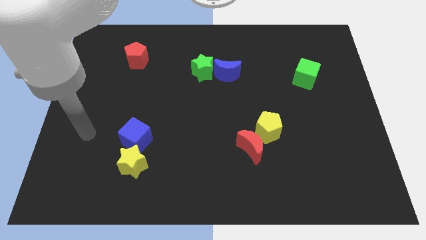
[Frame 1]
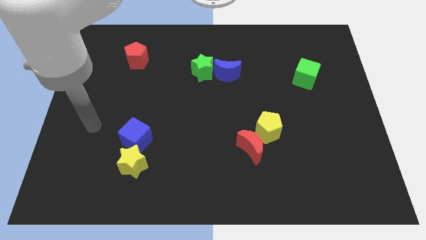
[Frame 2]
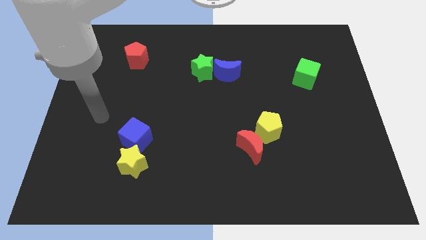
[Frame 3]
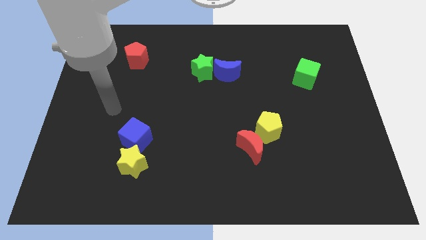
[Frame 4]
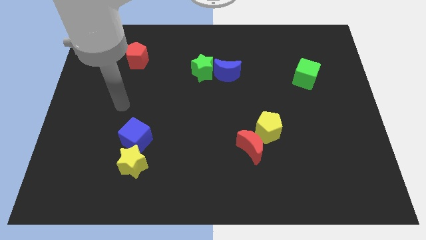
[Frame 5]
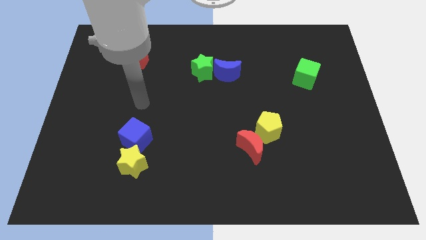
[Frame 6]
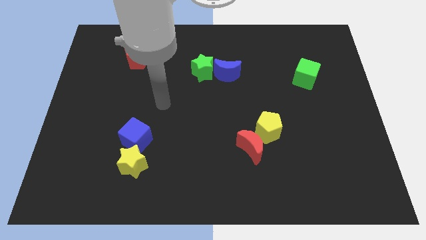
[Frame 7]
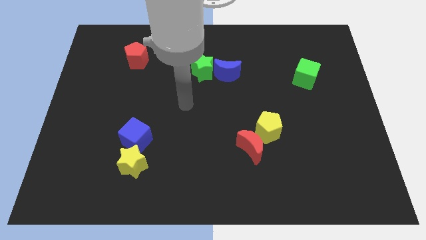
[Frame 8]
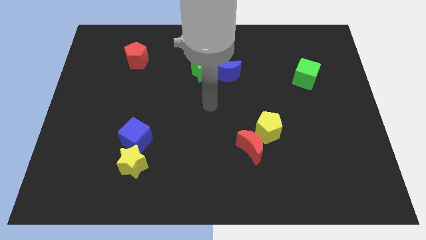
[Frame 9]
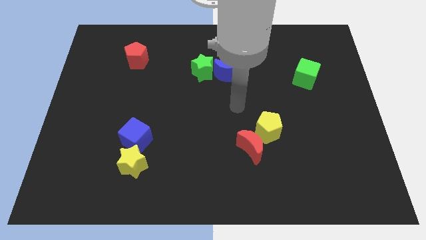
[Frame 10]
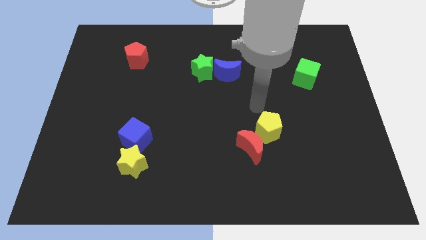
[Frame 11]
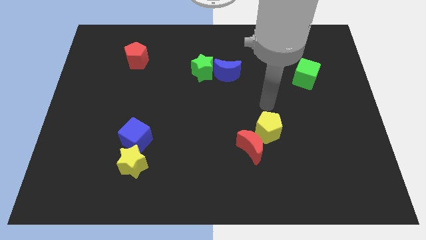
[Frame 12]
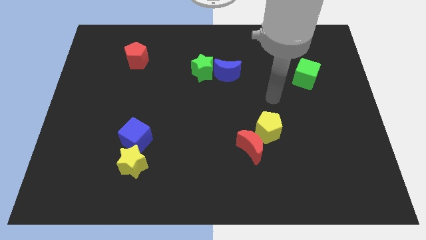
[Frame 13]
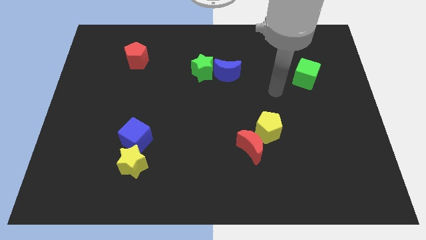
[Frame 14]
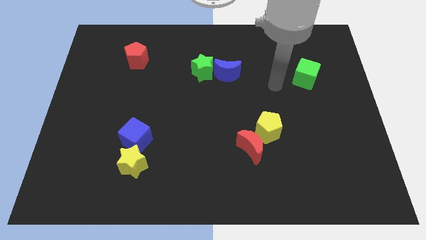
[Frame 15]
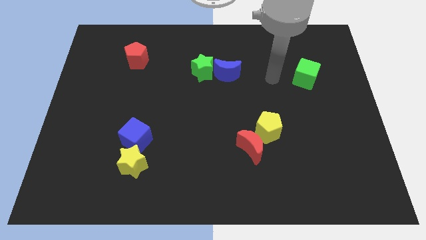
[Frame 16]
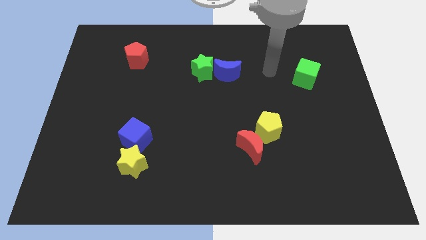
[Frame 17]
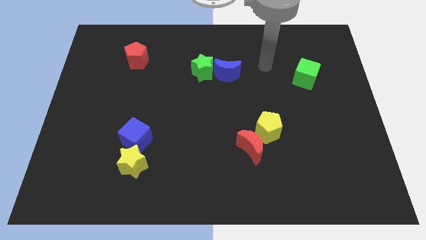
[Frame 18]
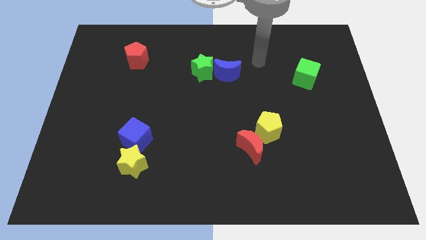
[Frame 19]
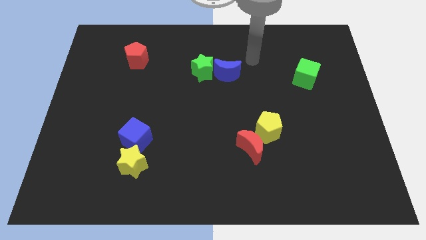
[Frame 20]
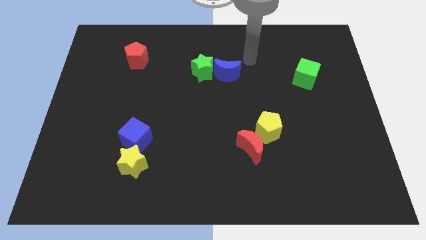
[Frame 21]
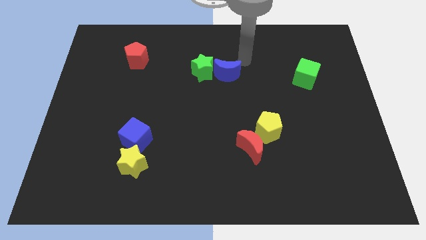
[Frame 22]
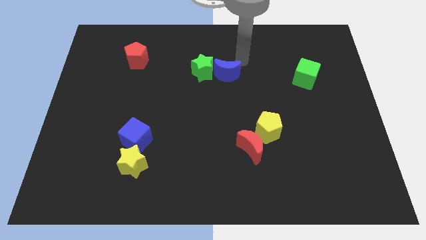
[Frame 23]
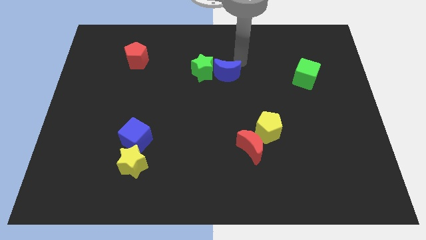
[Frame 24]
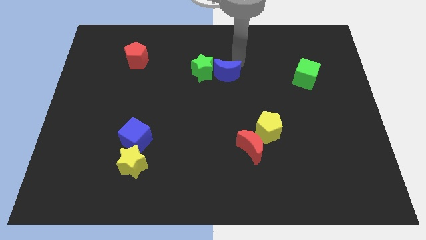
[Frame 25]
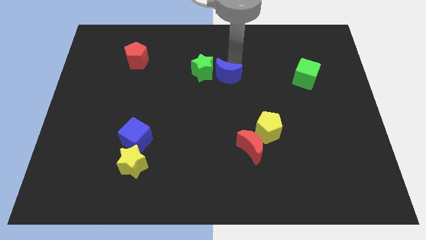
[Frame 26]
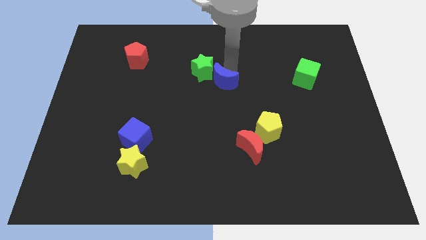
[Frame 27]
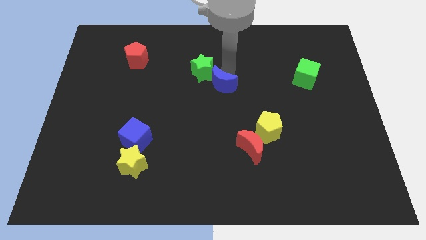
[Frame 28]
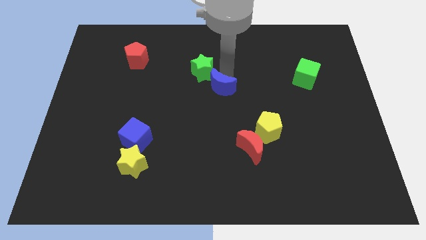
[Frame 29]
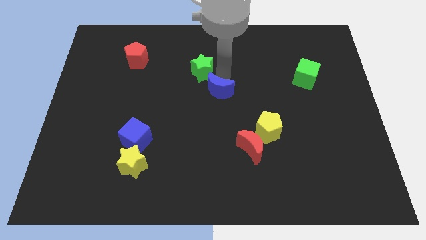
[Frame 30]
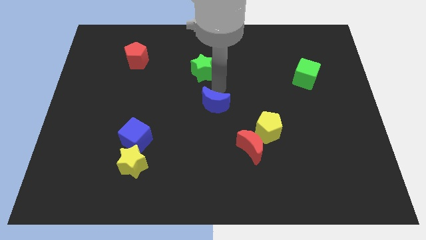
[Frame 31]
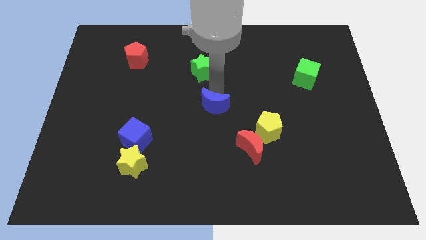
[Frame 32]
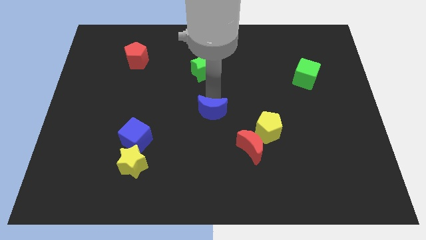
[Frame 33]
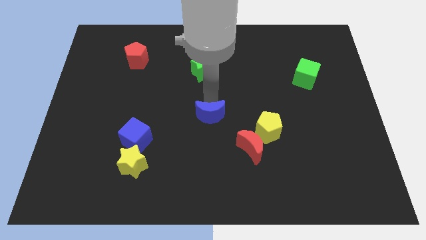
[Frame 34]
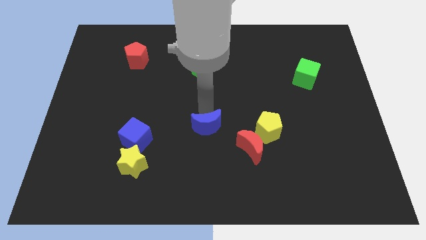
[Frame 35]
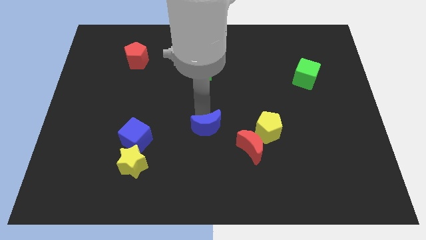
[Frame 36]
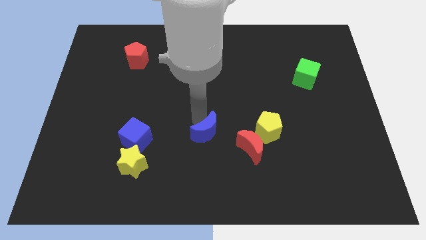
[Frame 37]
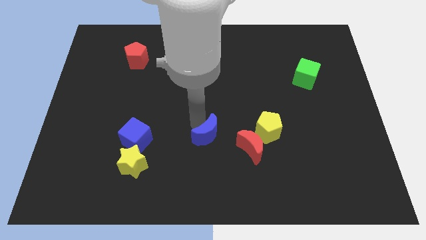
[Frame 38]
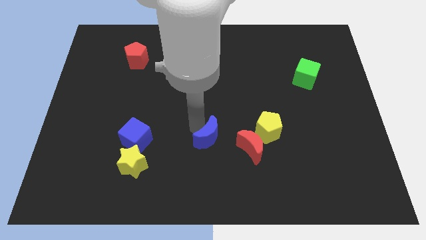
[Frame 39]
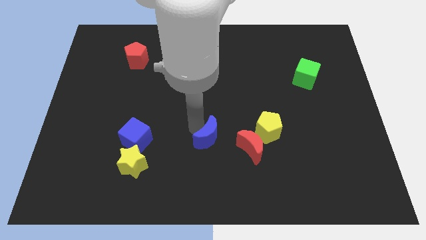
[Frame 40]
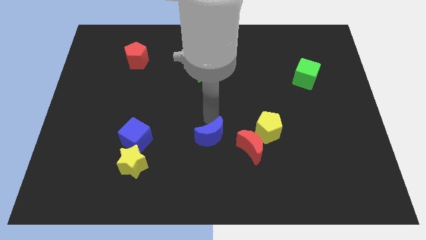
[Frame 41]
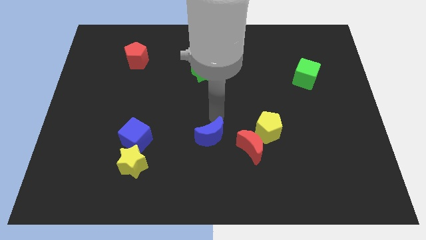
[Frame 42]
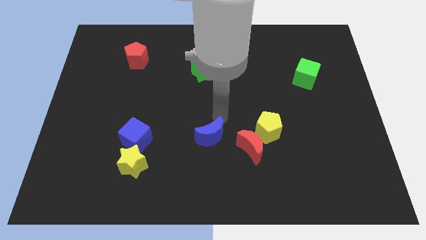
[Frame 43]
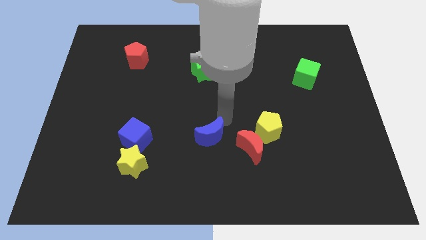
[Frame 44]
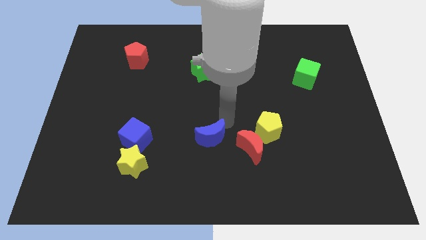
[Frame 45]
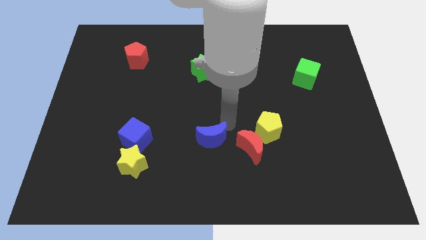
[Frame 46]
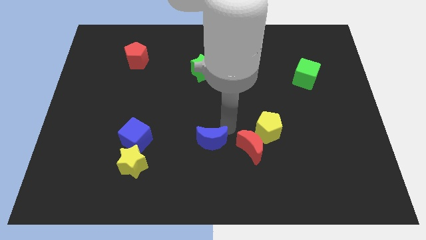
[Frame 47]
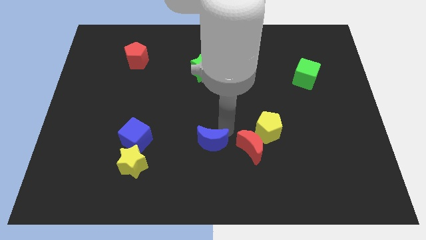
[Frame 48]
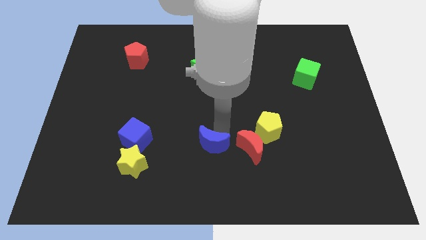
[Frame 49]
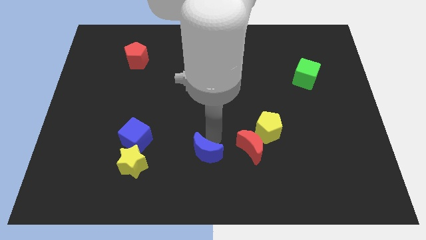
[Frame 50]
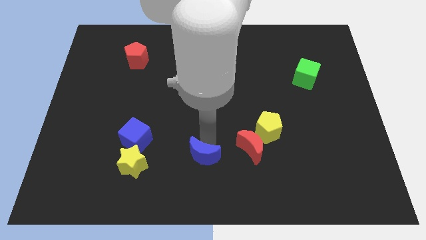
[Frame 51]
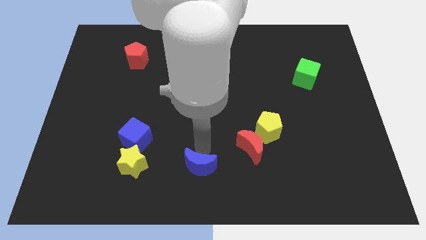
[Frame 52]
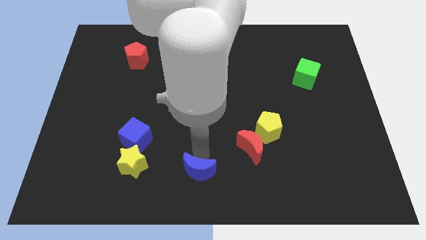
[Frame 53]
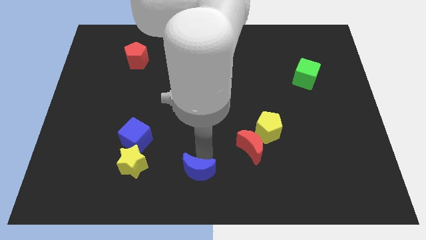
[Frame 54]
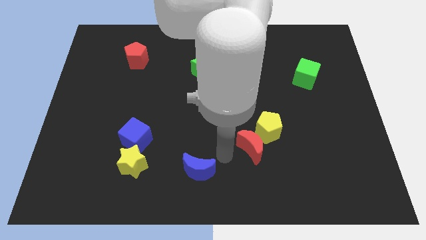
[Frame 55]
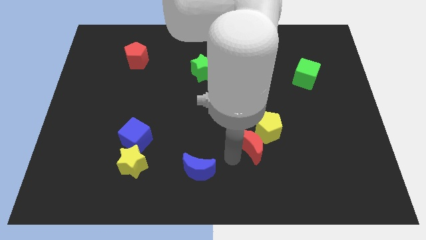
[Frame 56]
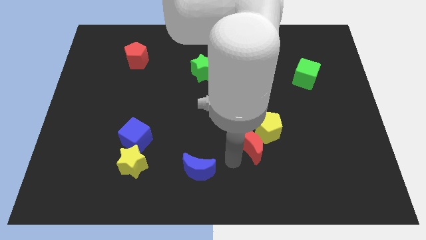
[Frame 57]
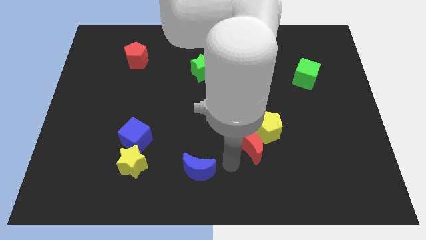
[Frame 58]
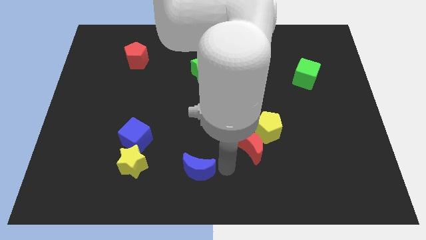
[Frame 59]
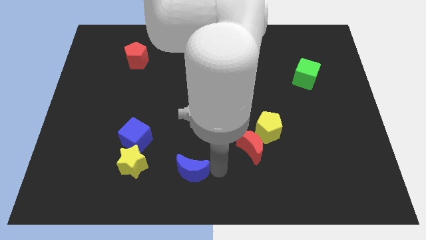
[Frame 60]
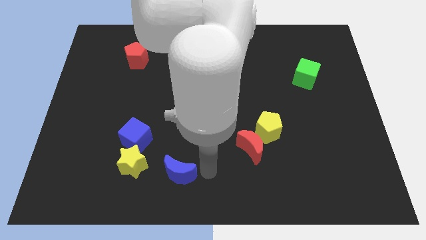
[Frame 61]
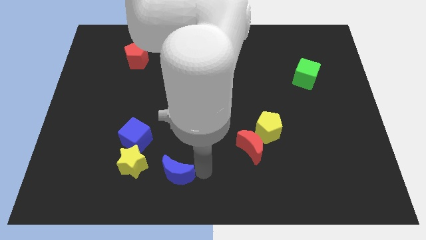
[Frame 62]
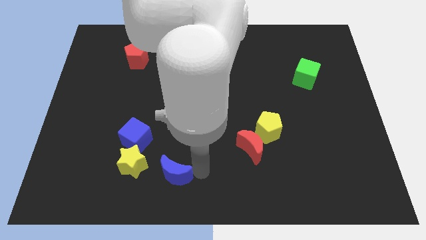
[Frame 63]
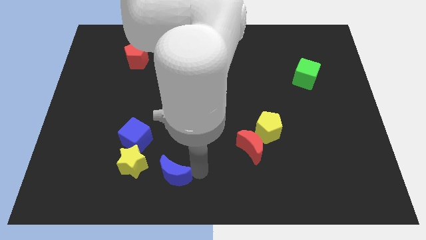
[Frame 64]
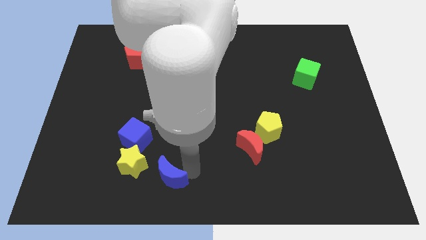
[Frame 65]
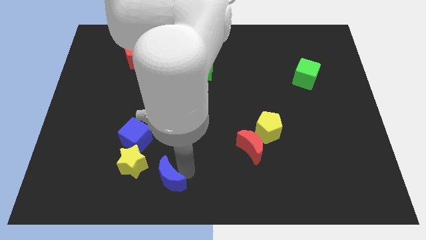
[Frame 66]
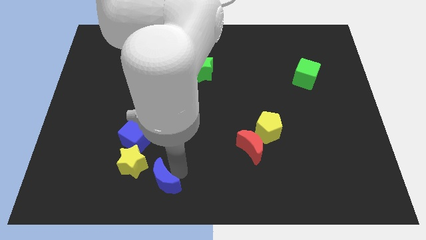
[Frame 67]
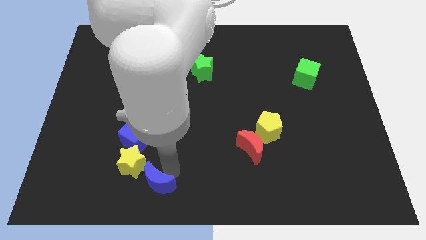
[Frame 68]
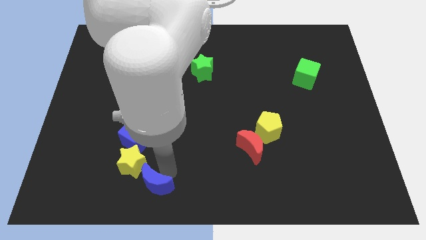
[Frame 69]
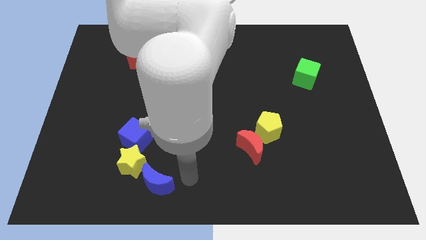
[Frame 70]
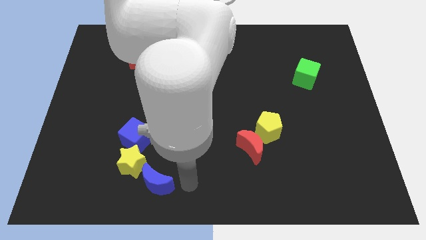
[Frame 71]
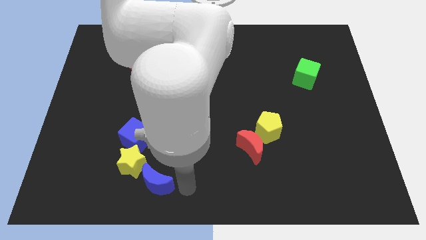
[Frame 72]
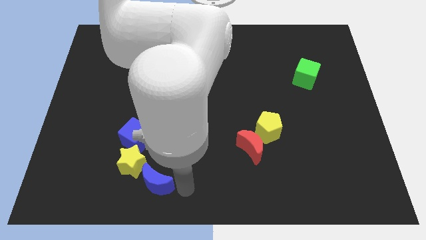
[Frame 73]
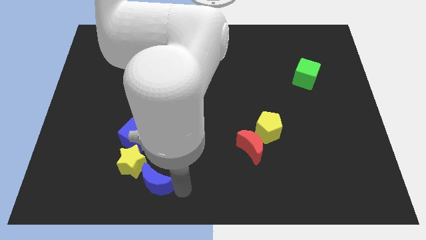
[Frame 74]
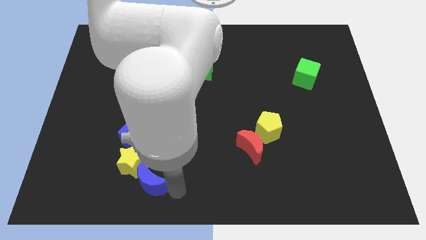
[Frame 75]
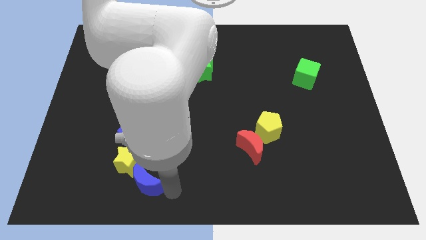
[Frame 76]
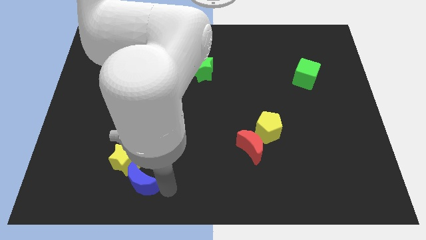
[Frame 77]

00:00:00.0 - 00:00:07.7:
move the blue moon towards the yellow star

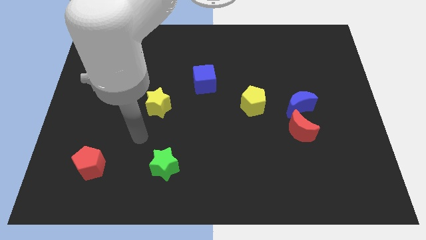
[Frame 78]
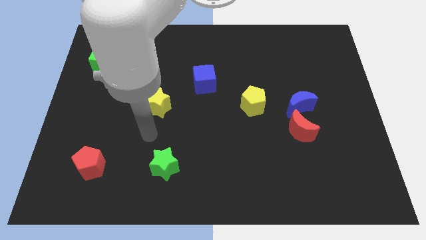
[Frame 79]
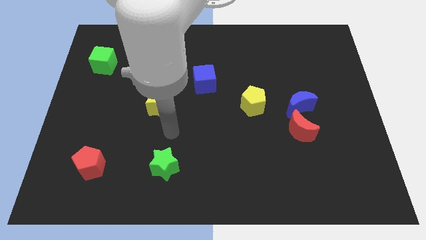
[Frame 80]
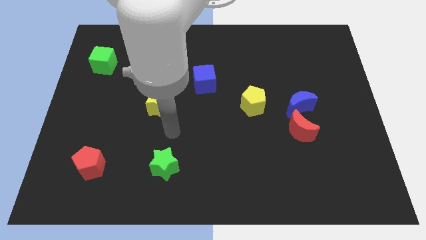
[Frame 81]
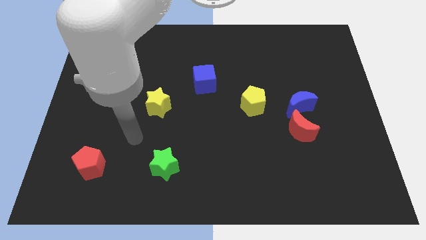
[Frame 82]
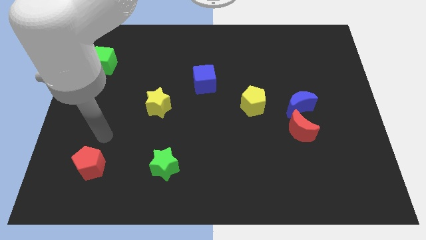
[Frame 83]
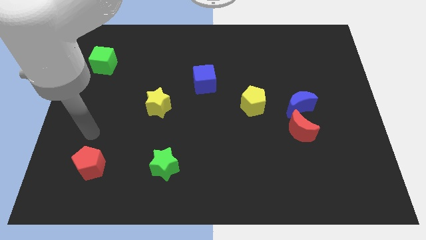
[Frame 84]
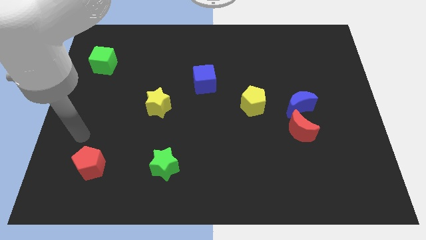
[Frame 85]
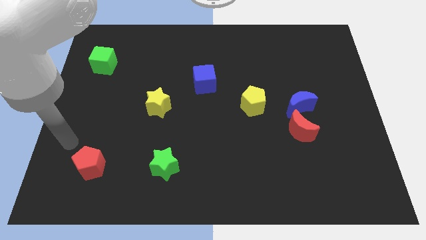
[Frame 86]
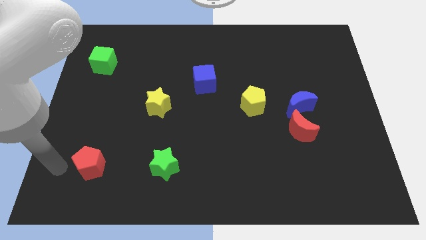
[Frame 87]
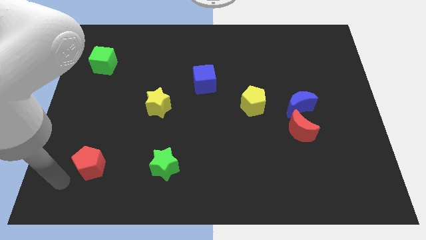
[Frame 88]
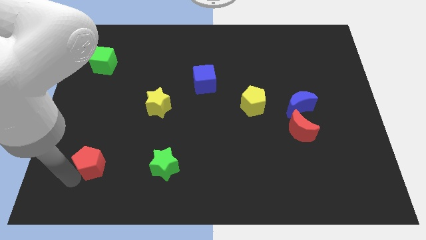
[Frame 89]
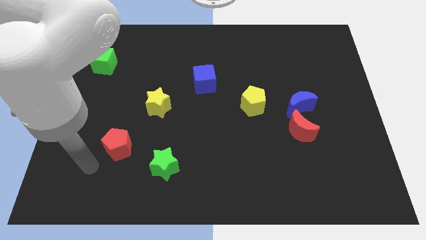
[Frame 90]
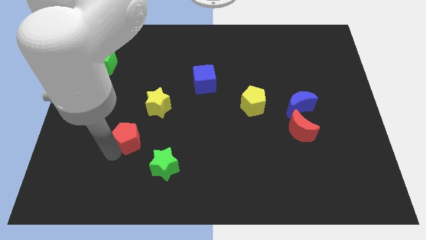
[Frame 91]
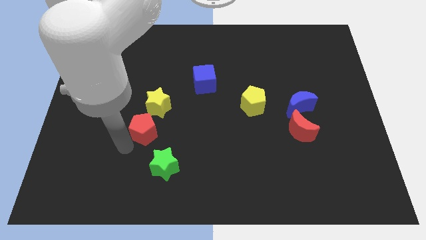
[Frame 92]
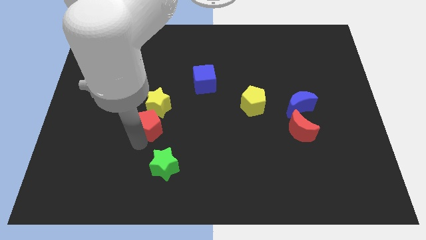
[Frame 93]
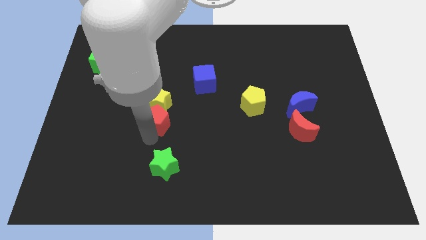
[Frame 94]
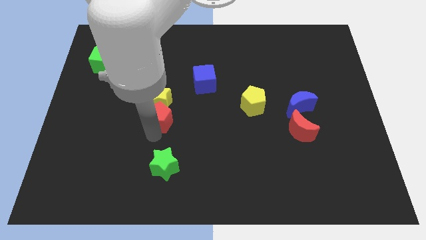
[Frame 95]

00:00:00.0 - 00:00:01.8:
slide the red pentagon next to the yellow star
